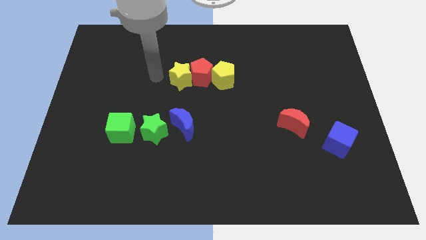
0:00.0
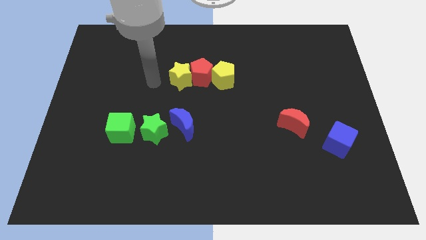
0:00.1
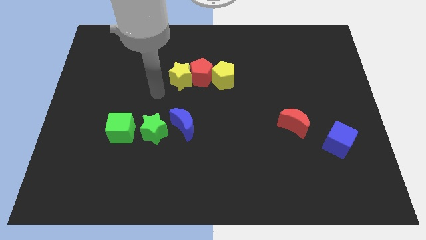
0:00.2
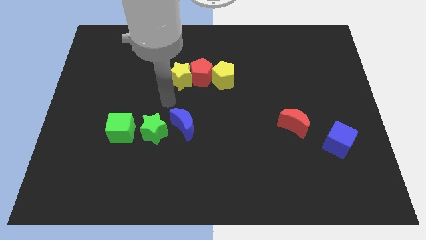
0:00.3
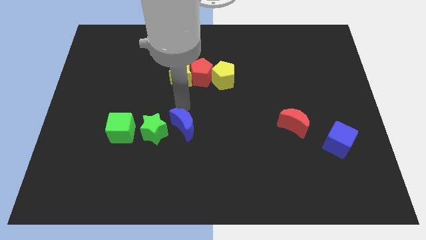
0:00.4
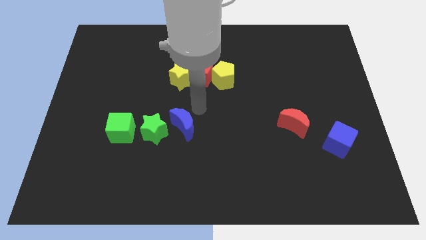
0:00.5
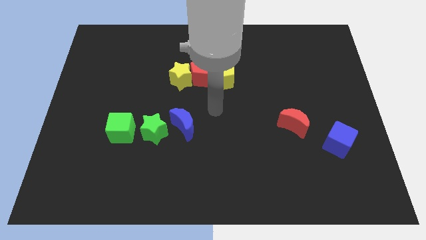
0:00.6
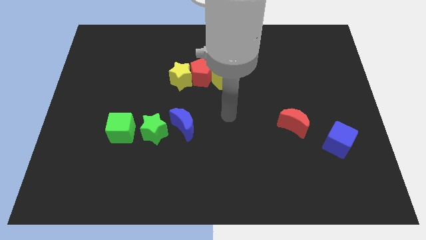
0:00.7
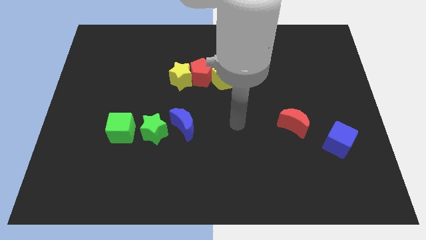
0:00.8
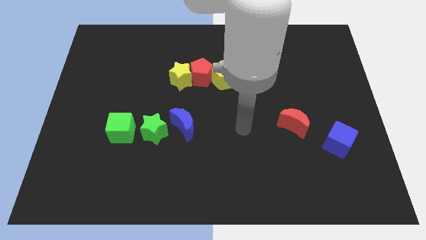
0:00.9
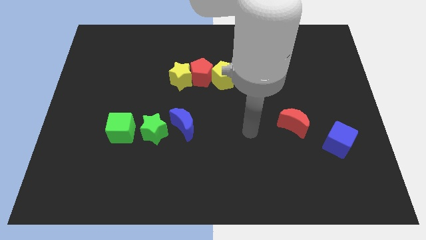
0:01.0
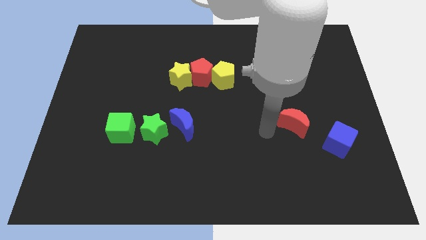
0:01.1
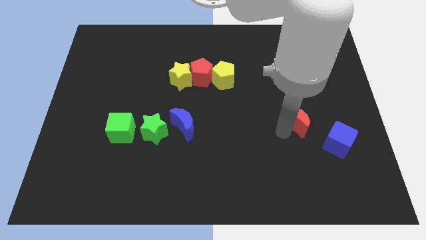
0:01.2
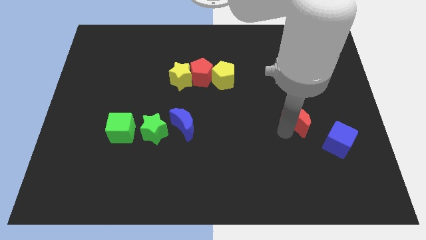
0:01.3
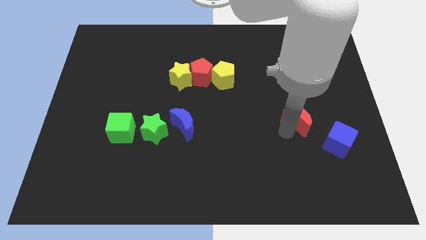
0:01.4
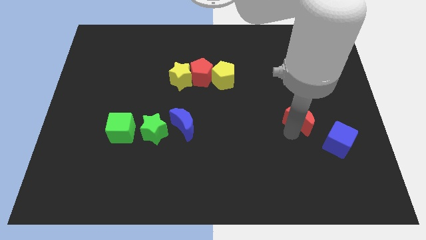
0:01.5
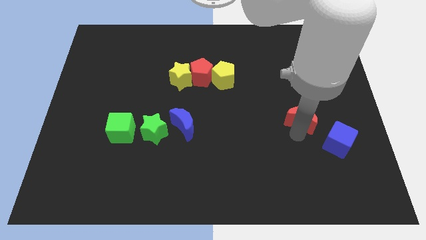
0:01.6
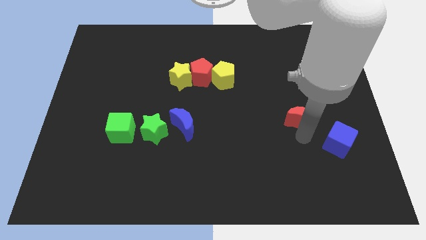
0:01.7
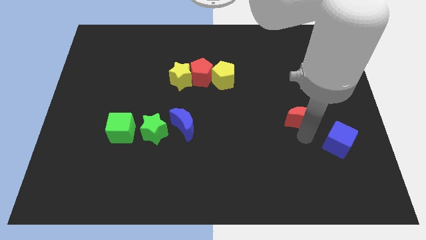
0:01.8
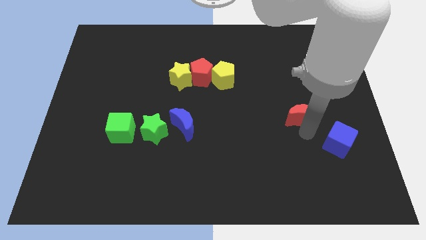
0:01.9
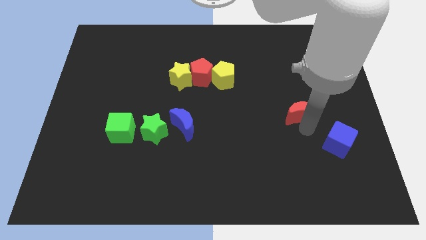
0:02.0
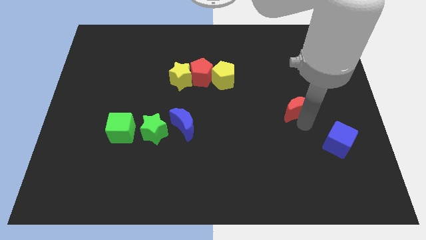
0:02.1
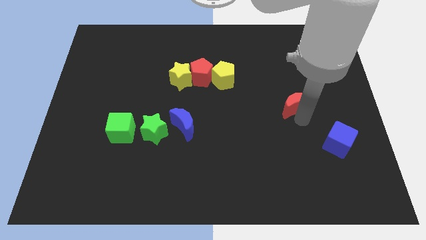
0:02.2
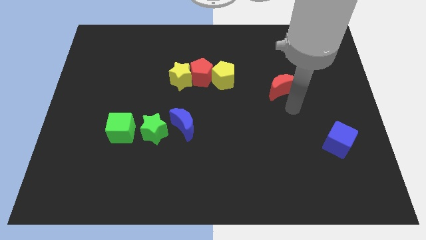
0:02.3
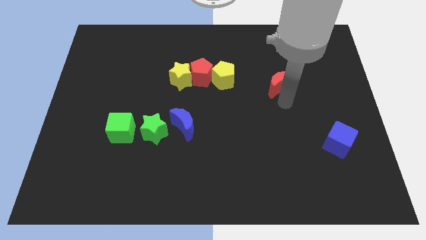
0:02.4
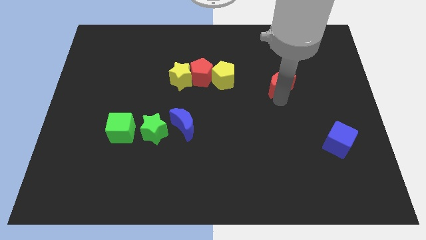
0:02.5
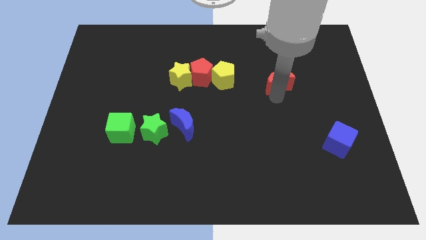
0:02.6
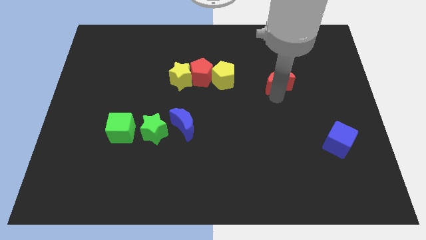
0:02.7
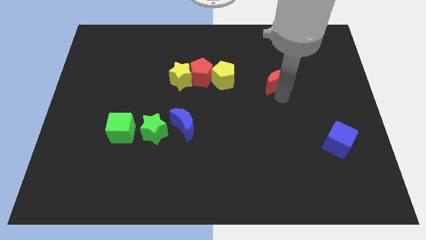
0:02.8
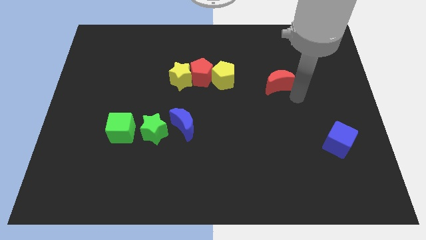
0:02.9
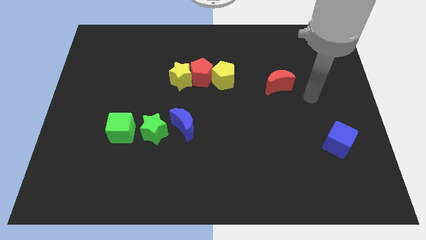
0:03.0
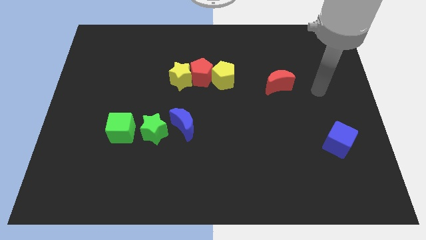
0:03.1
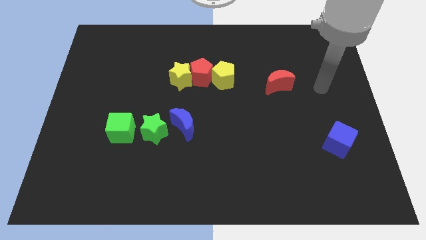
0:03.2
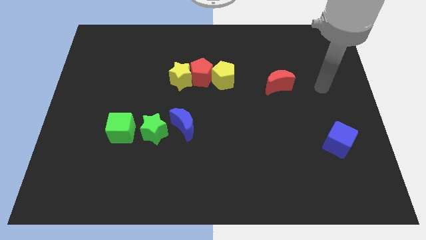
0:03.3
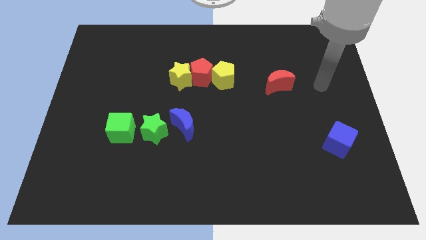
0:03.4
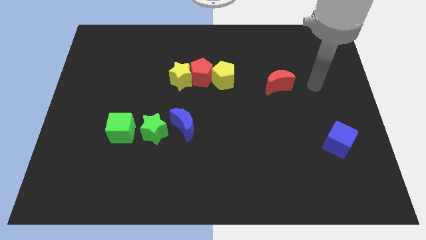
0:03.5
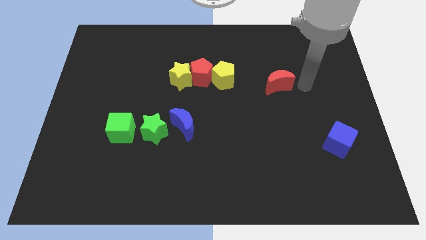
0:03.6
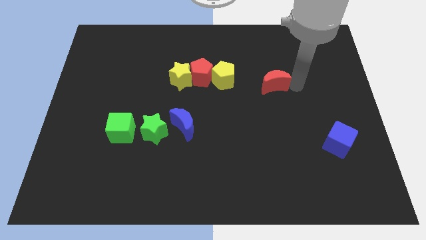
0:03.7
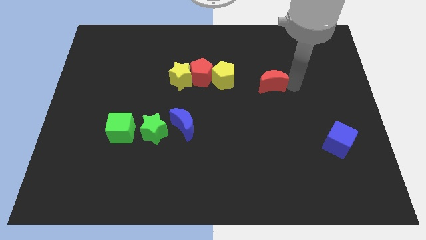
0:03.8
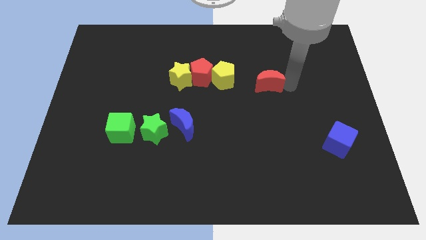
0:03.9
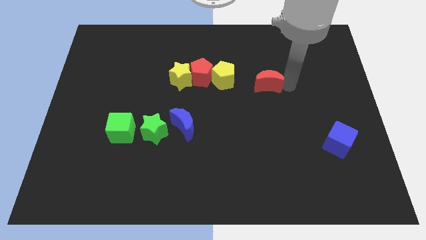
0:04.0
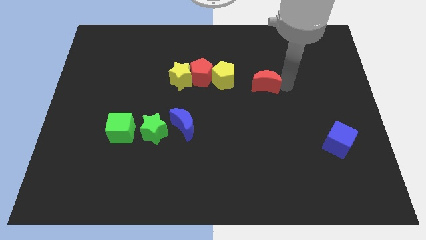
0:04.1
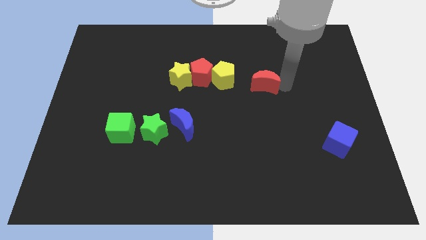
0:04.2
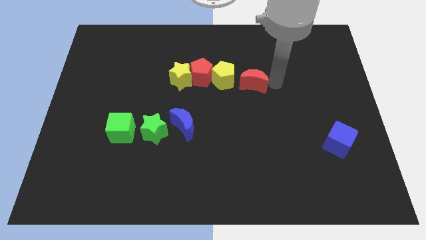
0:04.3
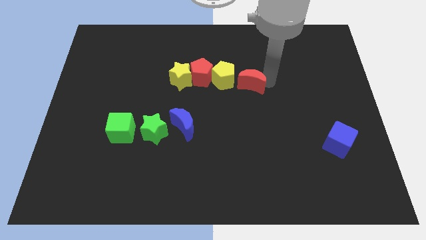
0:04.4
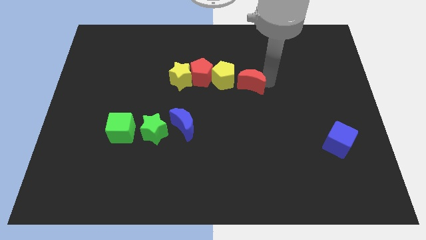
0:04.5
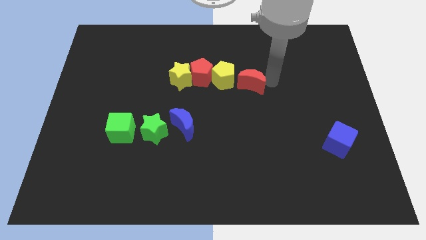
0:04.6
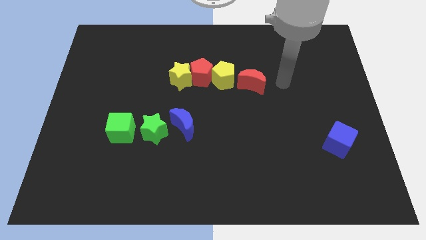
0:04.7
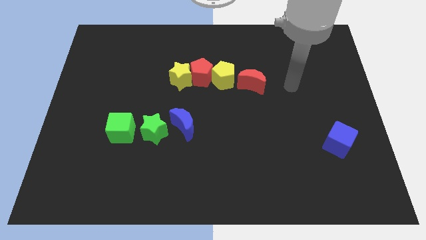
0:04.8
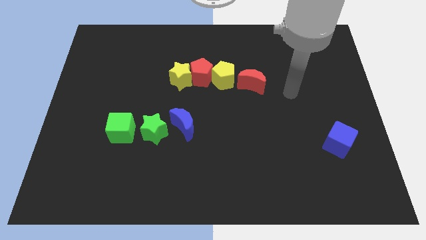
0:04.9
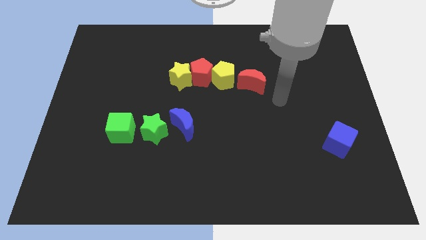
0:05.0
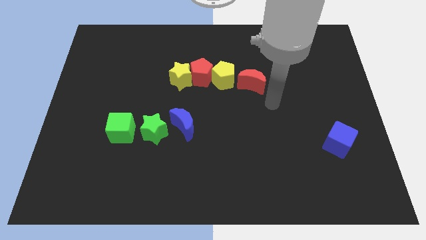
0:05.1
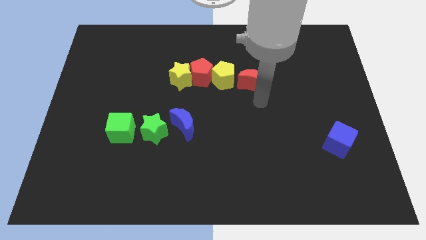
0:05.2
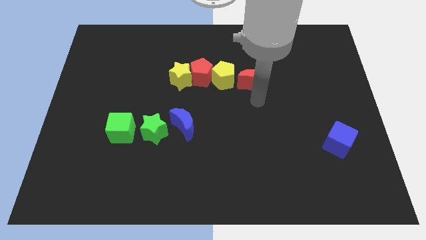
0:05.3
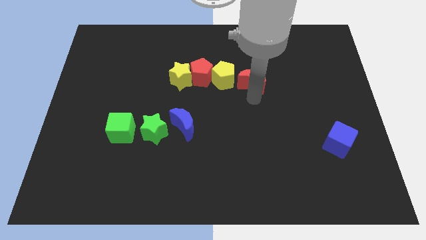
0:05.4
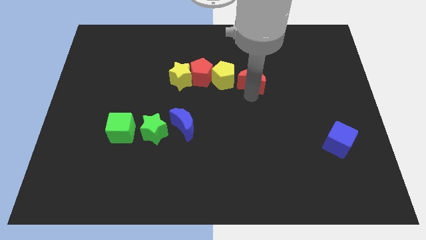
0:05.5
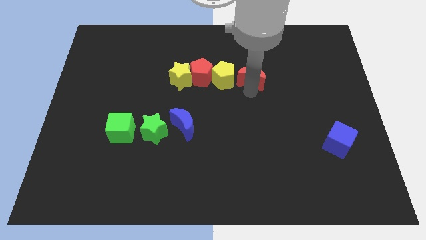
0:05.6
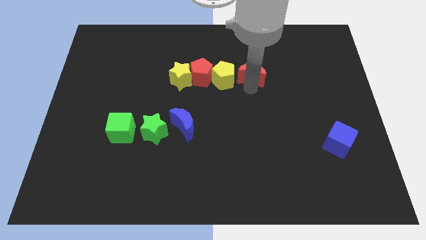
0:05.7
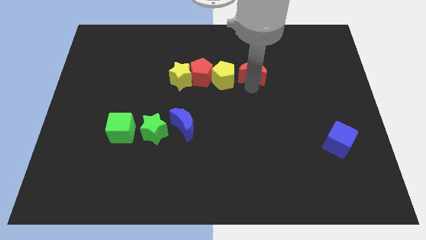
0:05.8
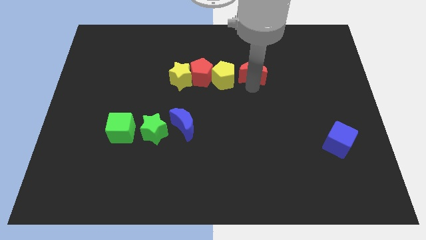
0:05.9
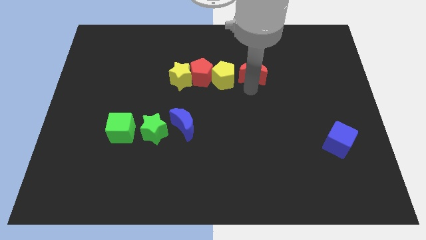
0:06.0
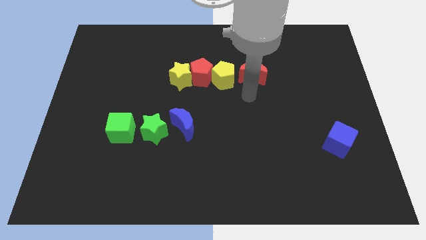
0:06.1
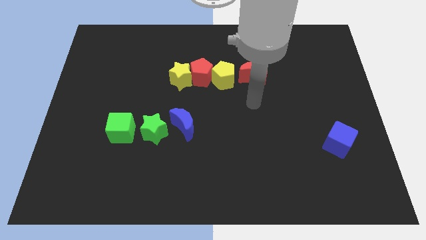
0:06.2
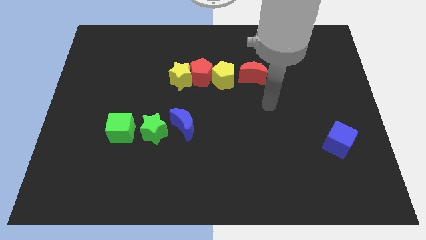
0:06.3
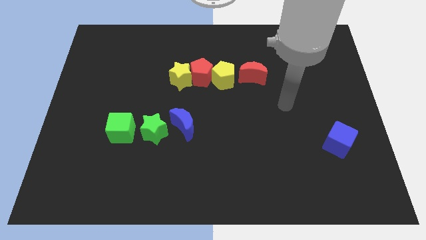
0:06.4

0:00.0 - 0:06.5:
push the red crescent towards the right side of yellow pentagon

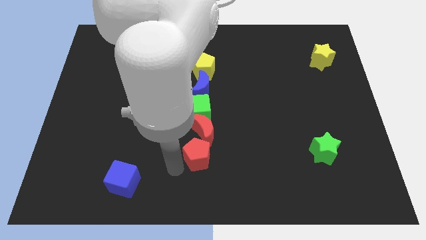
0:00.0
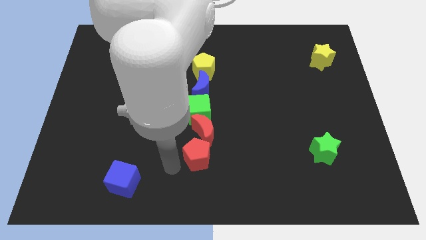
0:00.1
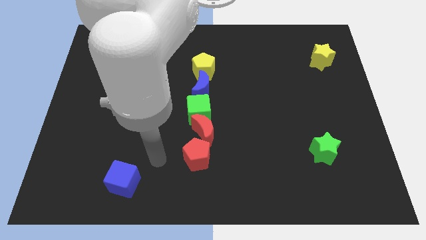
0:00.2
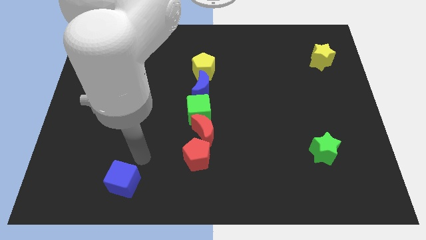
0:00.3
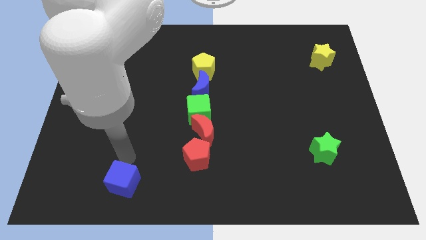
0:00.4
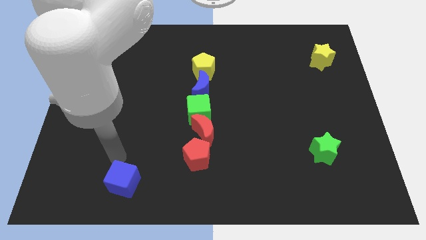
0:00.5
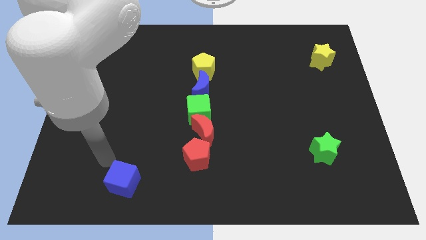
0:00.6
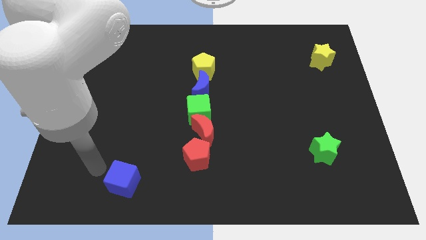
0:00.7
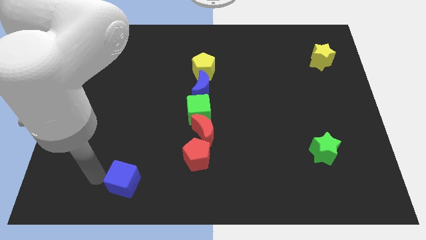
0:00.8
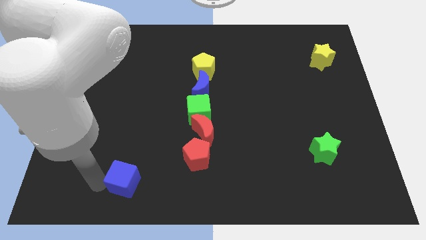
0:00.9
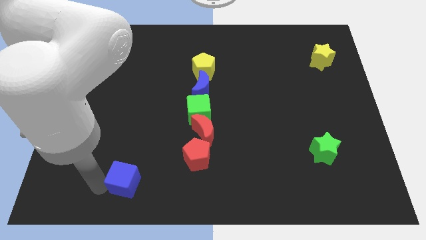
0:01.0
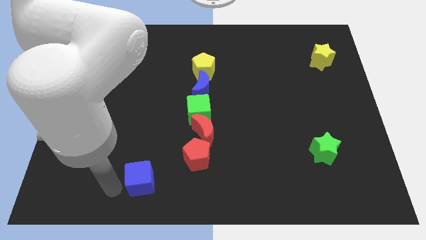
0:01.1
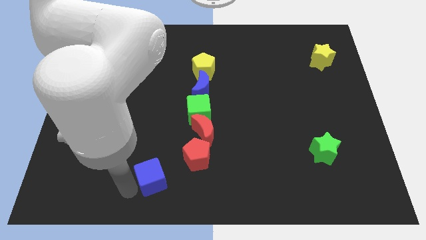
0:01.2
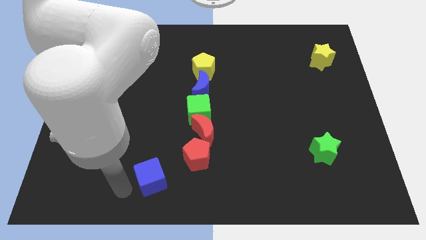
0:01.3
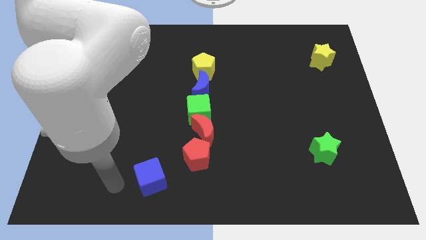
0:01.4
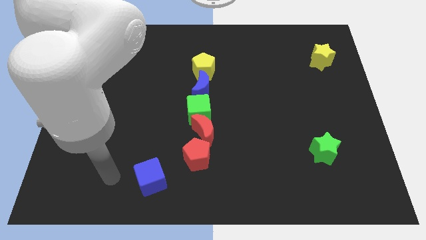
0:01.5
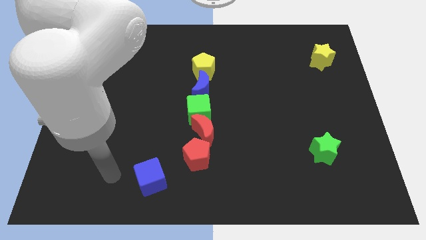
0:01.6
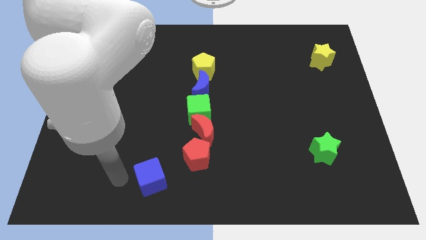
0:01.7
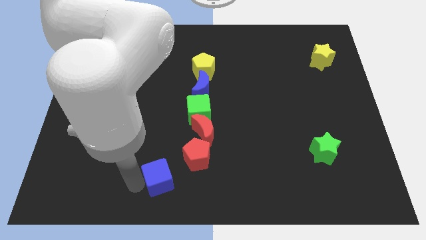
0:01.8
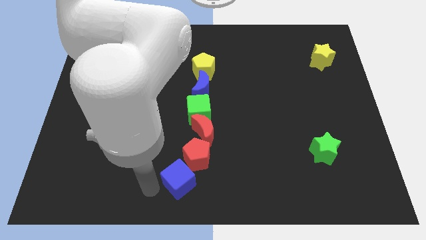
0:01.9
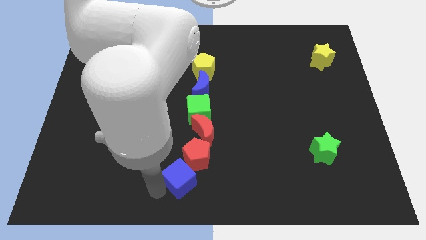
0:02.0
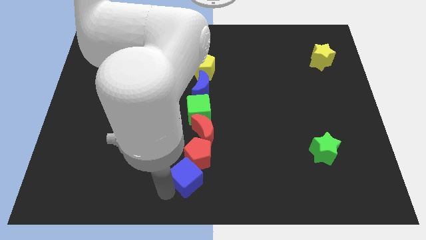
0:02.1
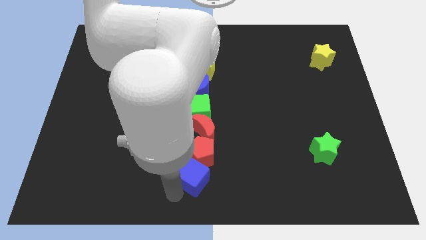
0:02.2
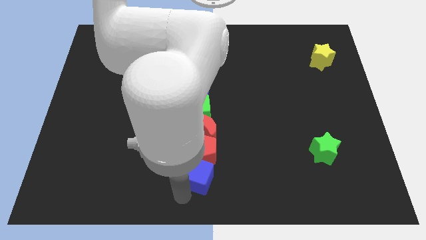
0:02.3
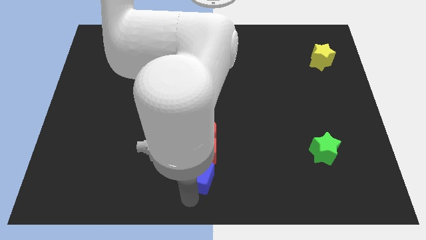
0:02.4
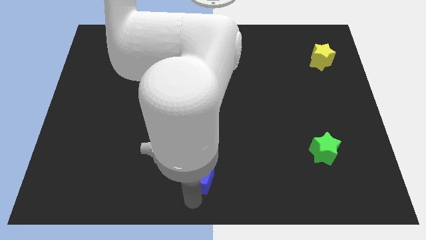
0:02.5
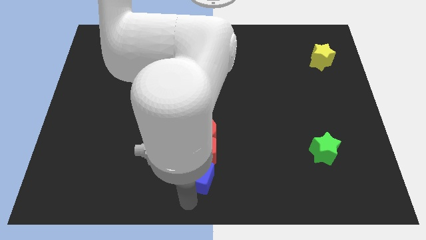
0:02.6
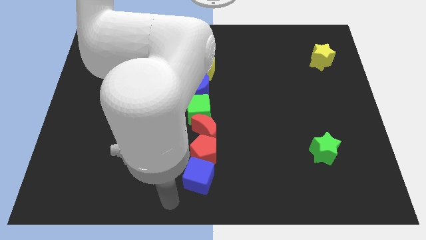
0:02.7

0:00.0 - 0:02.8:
place the blue cube at the bottom of the red pentagon
